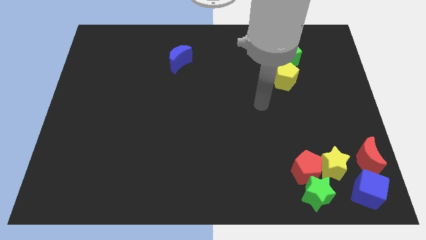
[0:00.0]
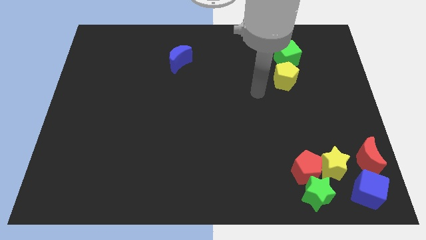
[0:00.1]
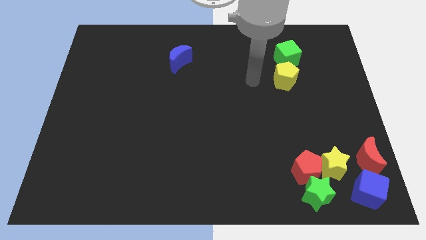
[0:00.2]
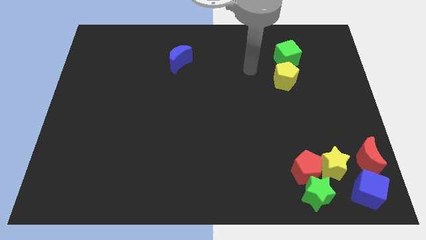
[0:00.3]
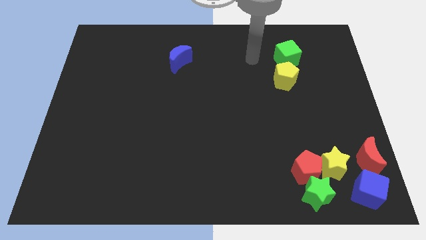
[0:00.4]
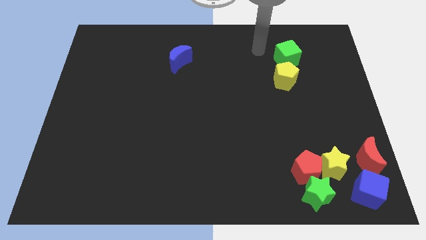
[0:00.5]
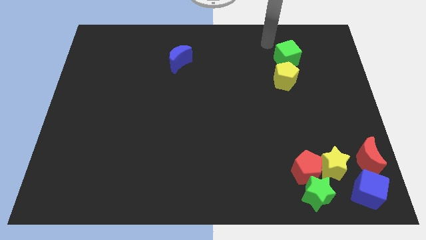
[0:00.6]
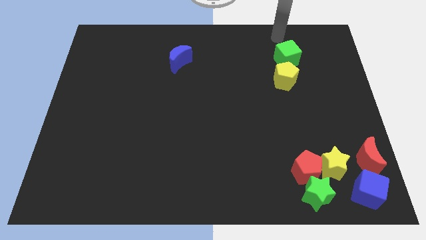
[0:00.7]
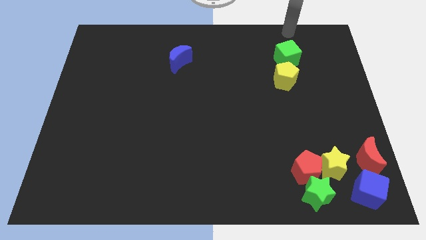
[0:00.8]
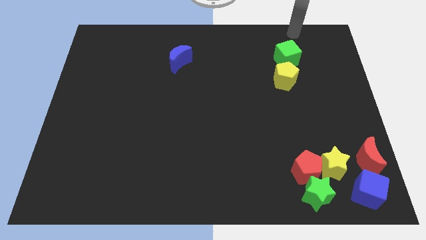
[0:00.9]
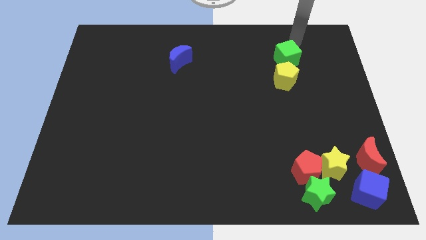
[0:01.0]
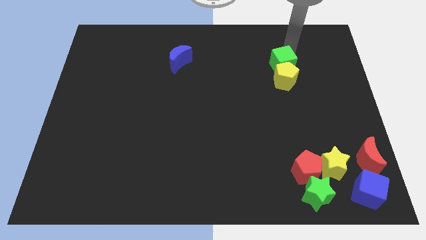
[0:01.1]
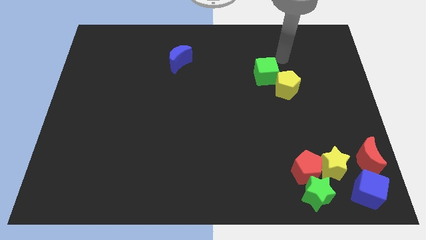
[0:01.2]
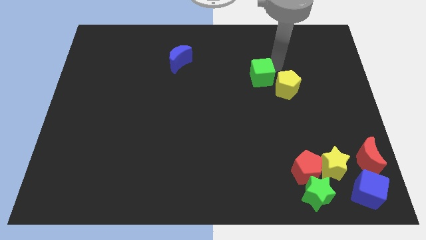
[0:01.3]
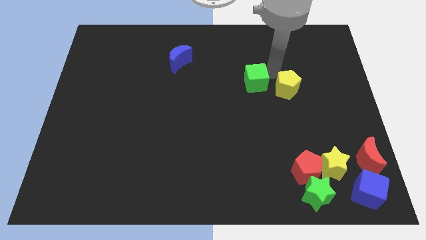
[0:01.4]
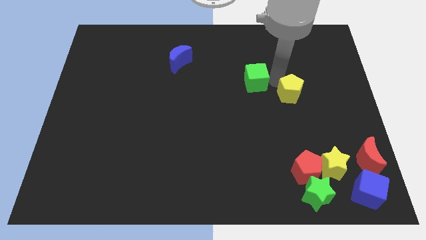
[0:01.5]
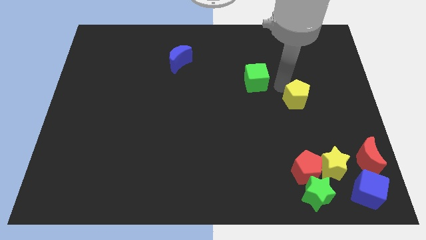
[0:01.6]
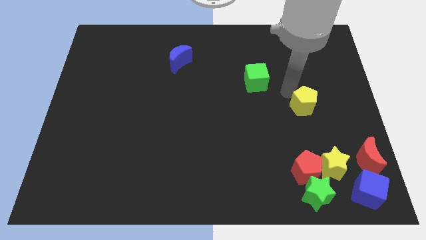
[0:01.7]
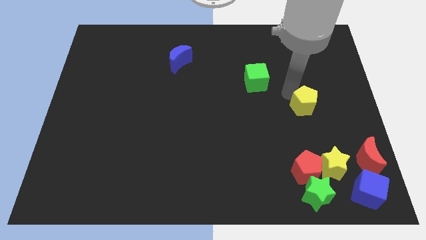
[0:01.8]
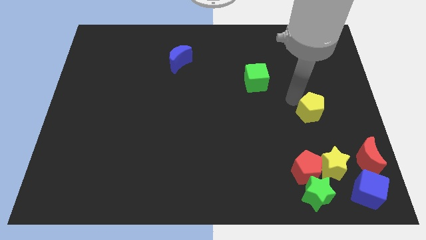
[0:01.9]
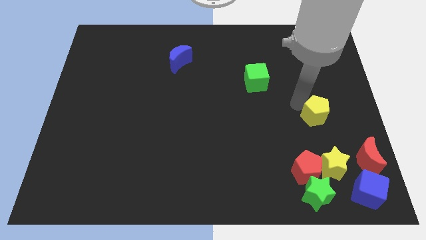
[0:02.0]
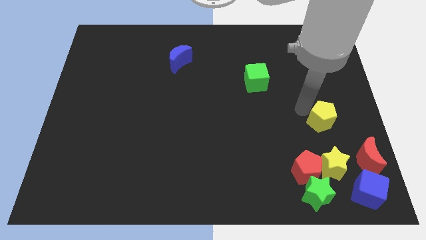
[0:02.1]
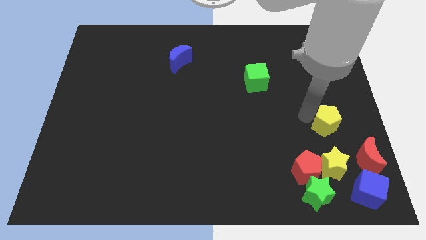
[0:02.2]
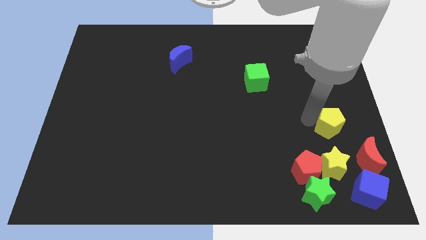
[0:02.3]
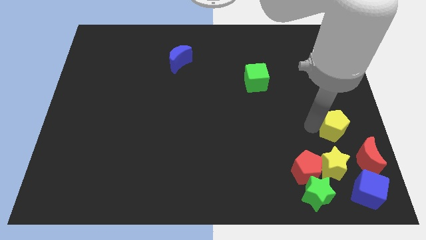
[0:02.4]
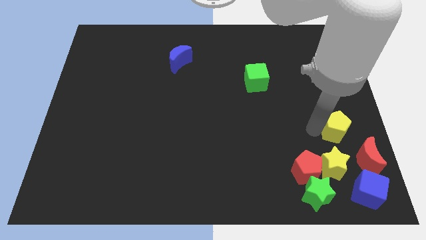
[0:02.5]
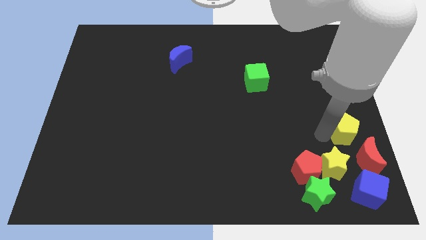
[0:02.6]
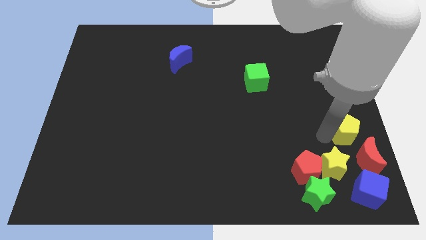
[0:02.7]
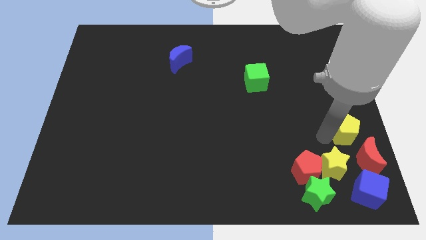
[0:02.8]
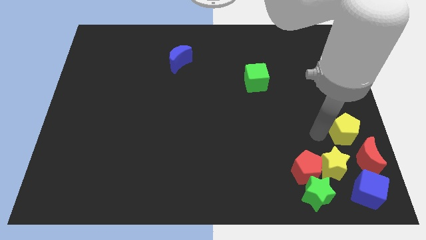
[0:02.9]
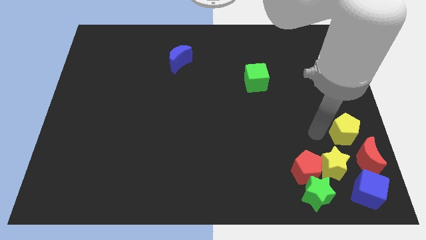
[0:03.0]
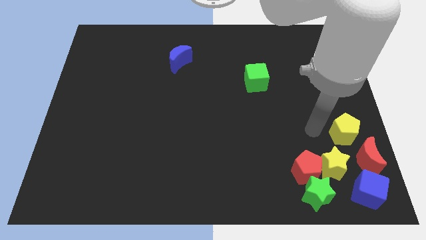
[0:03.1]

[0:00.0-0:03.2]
push the yellow pentagon to the top left of the red crescent

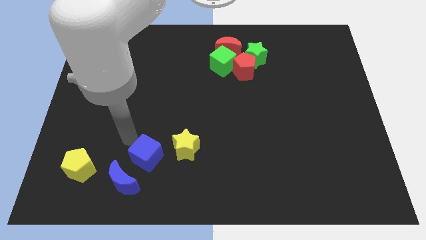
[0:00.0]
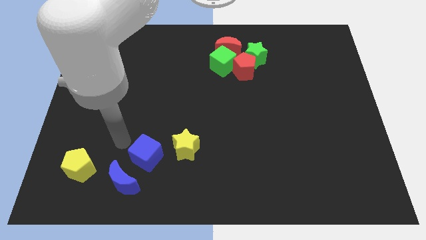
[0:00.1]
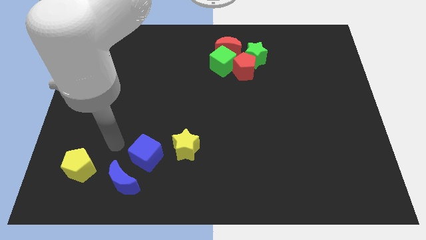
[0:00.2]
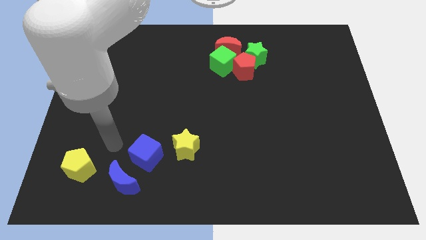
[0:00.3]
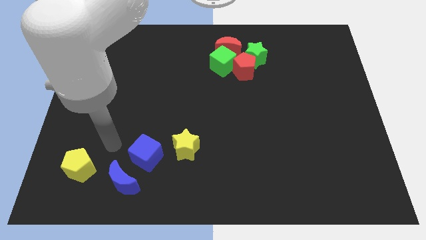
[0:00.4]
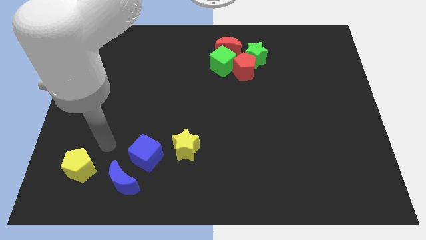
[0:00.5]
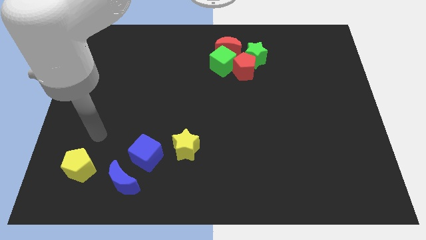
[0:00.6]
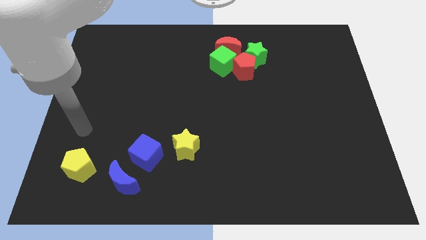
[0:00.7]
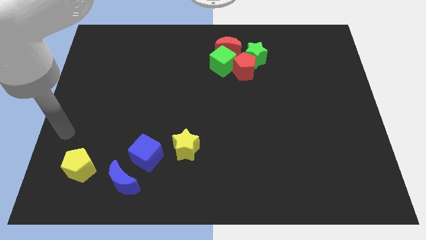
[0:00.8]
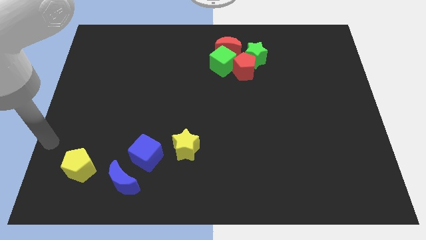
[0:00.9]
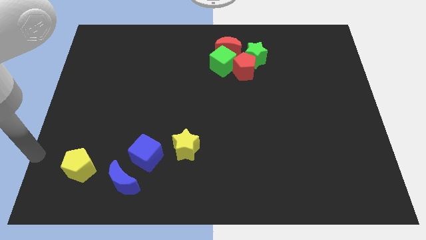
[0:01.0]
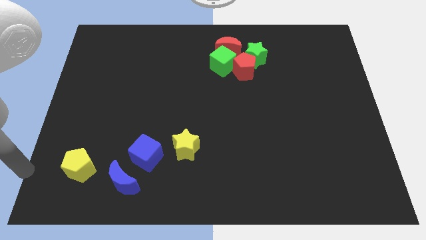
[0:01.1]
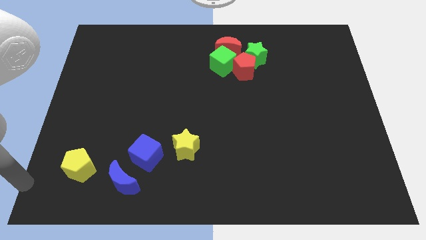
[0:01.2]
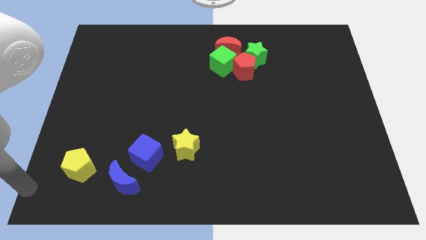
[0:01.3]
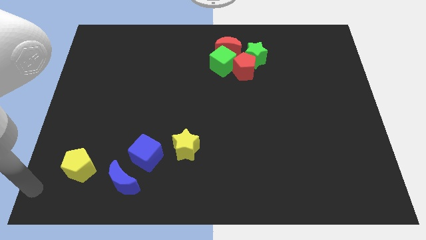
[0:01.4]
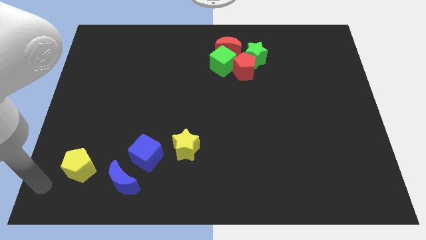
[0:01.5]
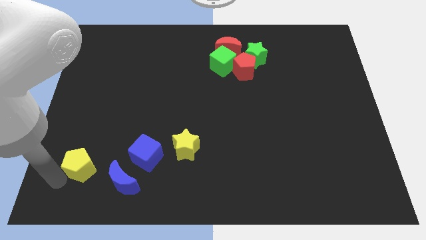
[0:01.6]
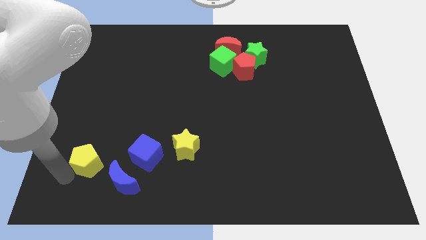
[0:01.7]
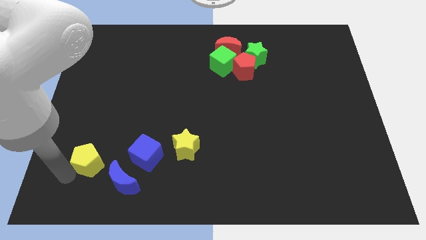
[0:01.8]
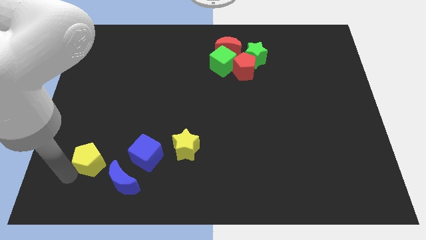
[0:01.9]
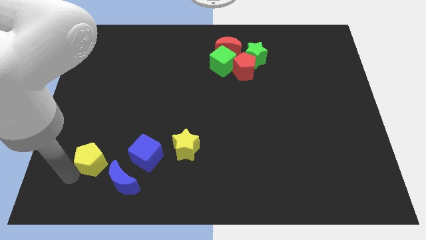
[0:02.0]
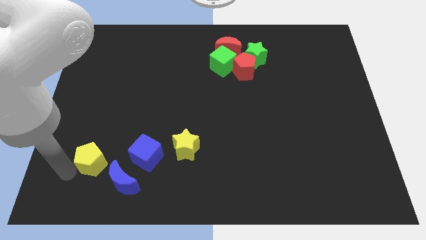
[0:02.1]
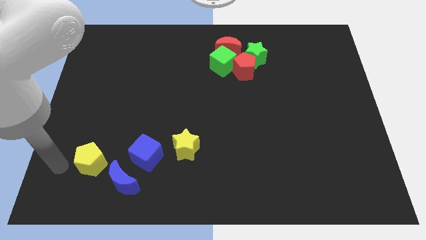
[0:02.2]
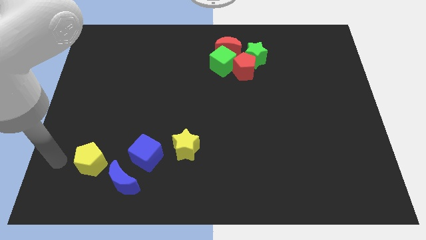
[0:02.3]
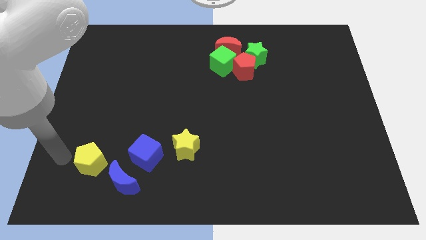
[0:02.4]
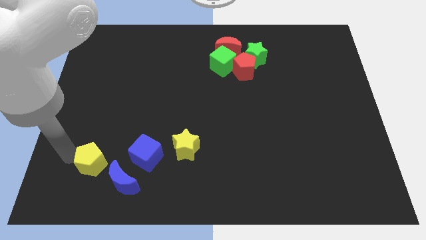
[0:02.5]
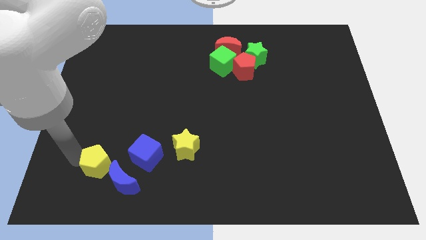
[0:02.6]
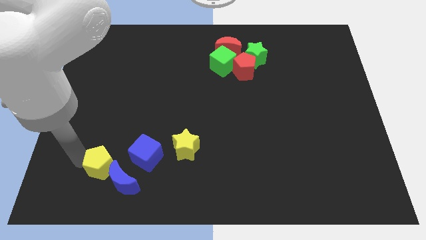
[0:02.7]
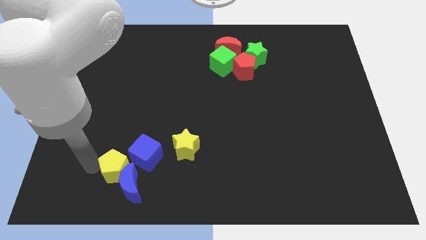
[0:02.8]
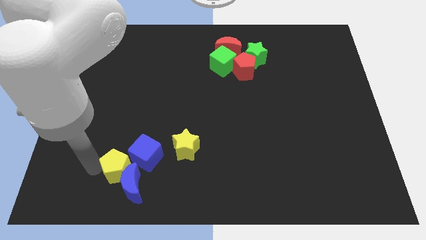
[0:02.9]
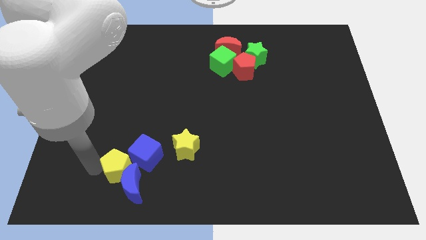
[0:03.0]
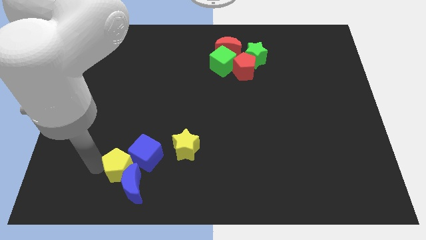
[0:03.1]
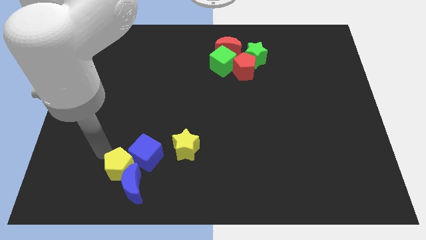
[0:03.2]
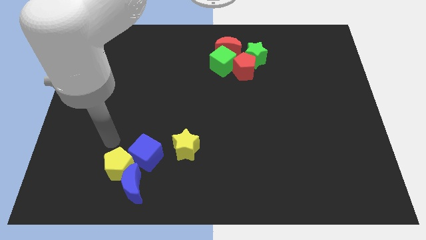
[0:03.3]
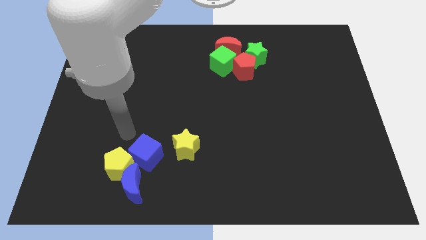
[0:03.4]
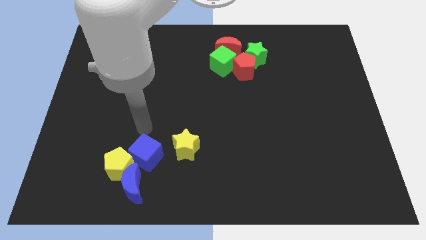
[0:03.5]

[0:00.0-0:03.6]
move the yellow pentagon to the top left of the blue moon

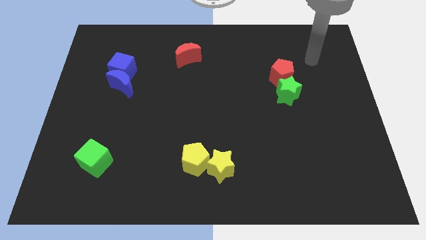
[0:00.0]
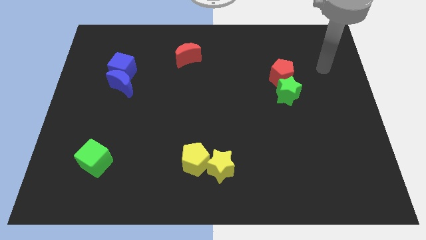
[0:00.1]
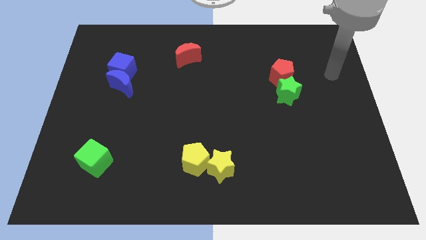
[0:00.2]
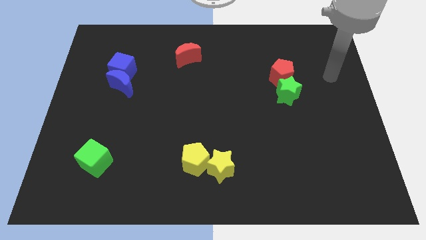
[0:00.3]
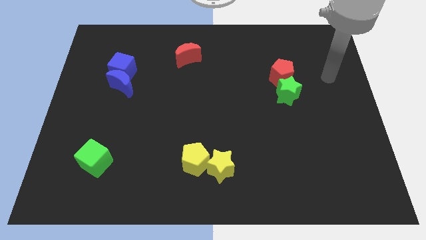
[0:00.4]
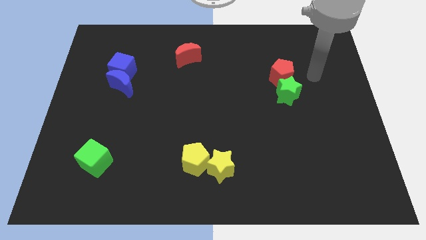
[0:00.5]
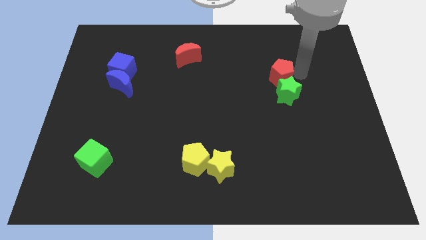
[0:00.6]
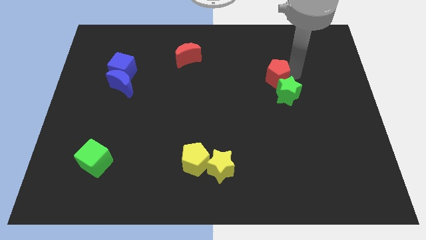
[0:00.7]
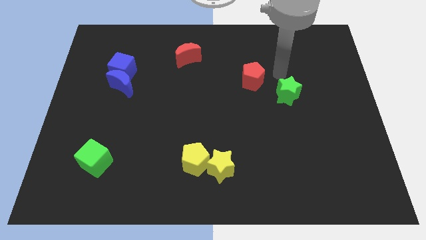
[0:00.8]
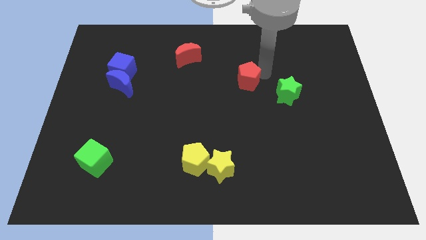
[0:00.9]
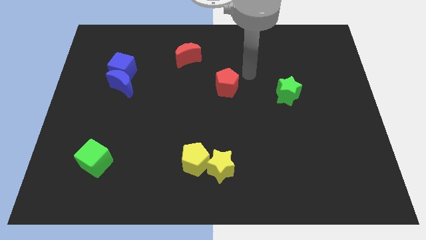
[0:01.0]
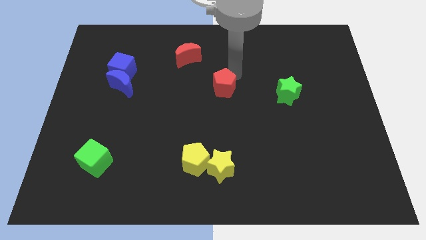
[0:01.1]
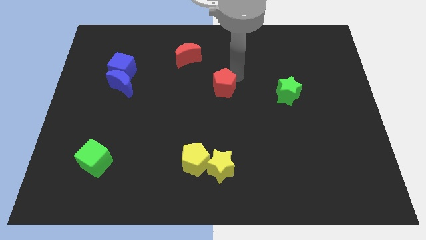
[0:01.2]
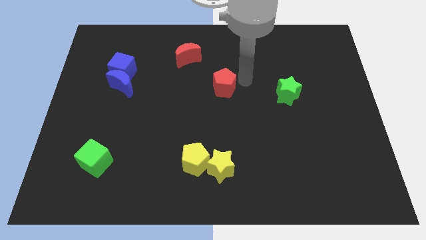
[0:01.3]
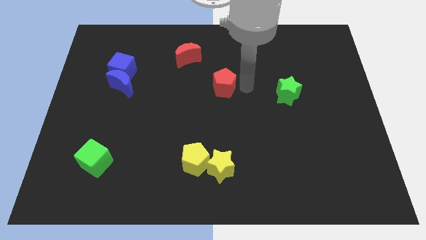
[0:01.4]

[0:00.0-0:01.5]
push the red pentagon left to the green star

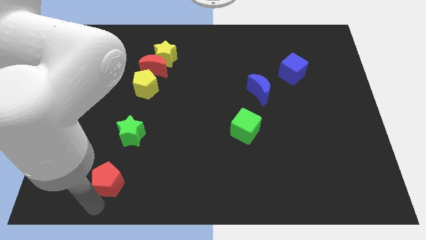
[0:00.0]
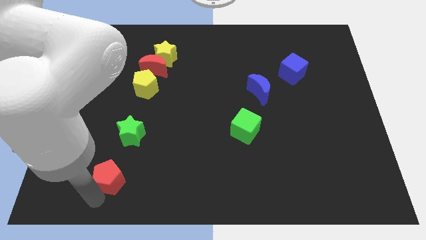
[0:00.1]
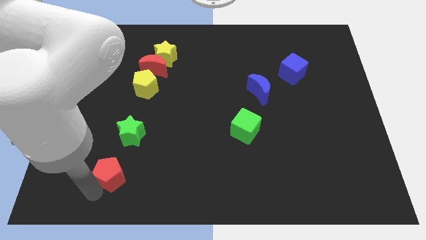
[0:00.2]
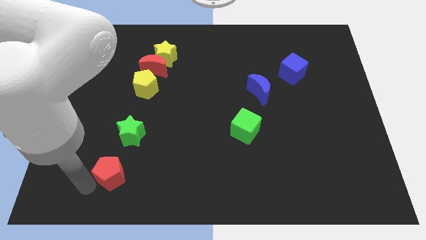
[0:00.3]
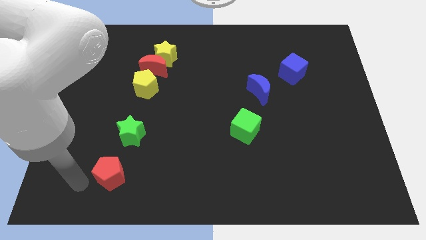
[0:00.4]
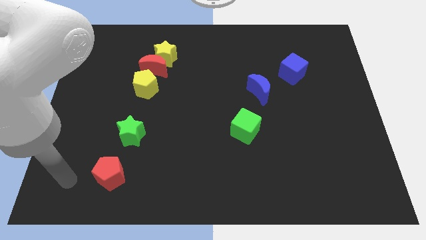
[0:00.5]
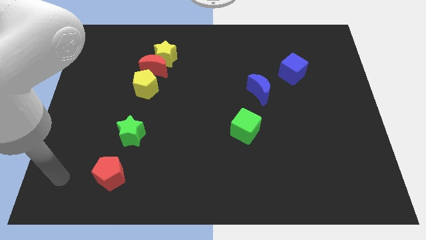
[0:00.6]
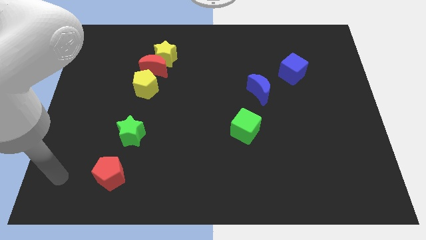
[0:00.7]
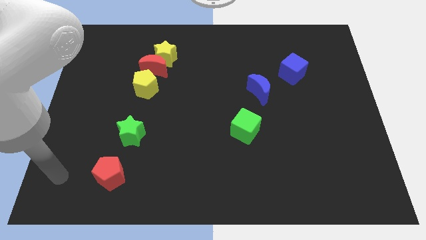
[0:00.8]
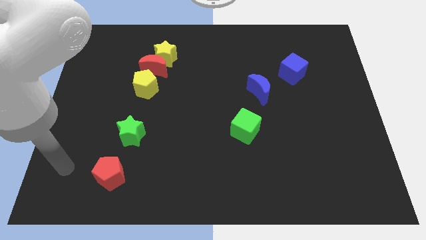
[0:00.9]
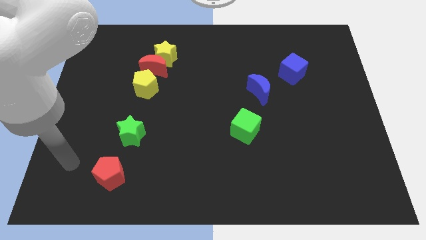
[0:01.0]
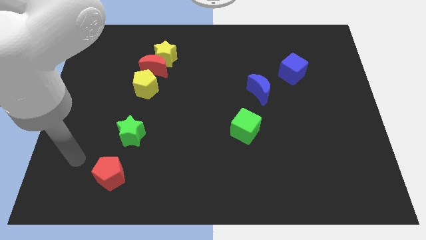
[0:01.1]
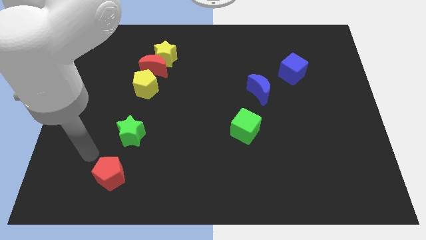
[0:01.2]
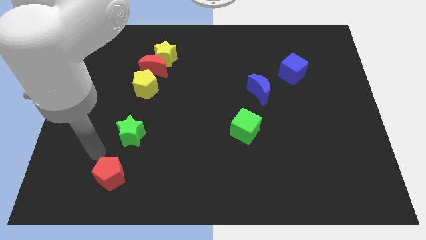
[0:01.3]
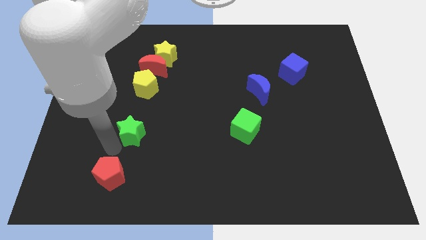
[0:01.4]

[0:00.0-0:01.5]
move the red pentagon slightly to the top side of the board
